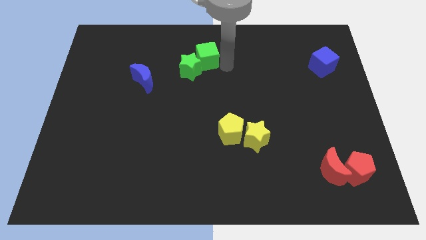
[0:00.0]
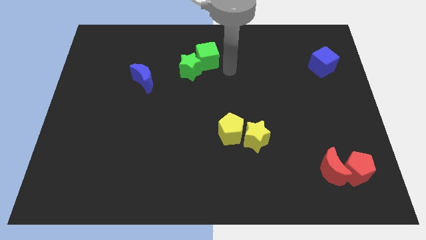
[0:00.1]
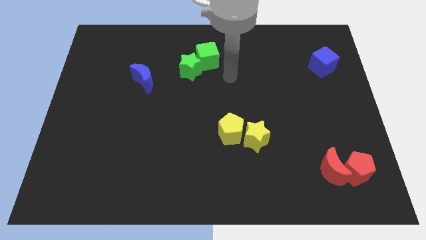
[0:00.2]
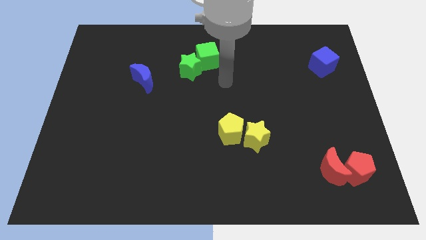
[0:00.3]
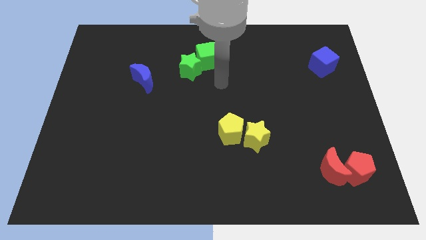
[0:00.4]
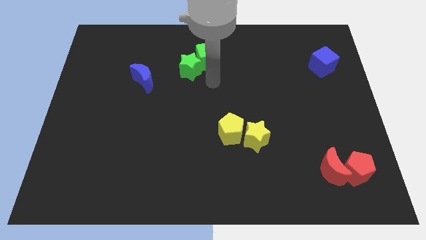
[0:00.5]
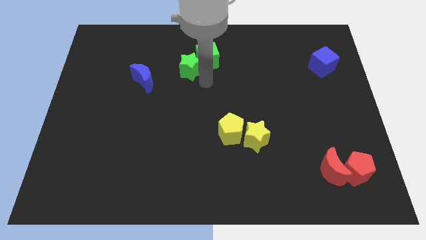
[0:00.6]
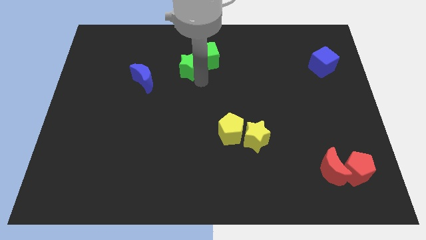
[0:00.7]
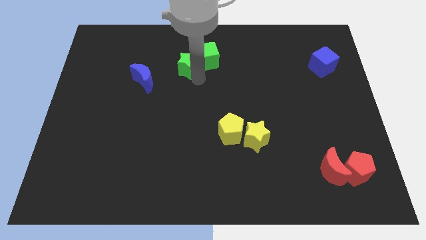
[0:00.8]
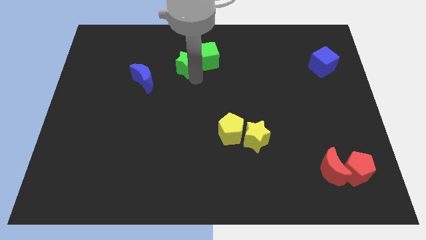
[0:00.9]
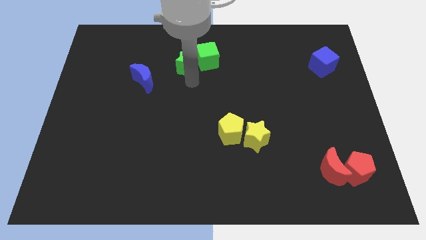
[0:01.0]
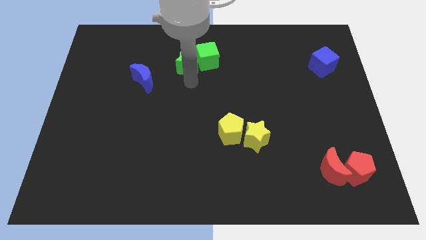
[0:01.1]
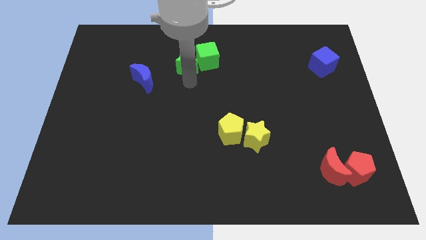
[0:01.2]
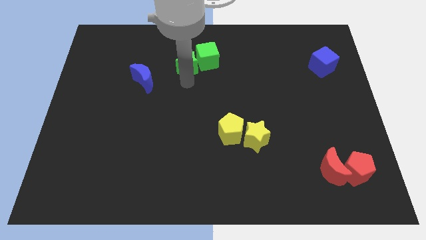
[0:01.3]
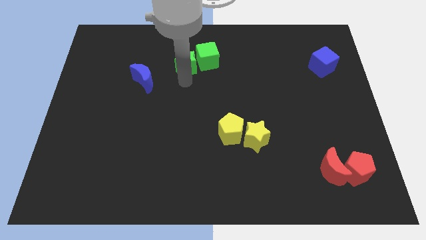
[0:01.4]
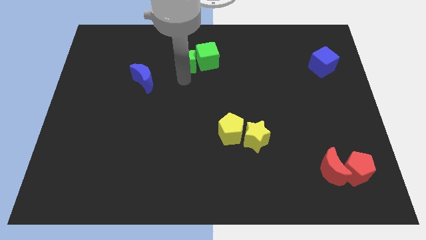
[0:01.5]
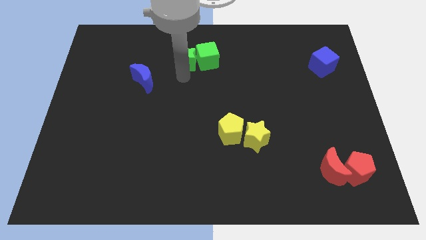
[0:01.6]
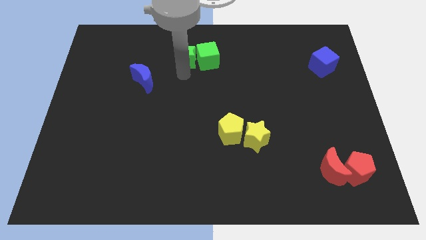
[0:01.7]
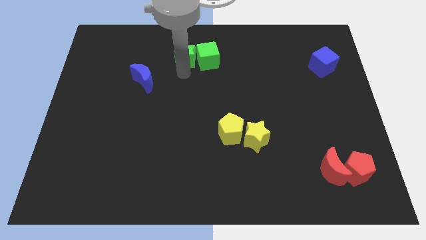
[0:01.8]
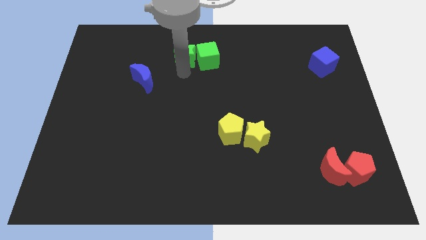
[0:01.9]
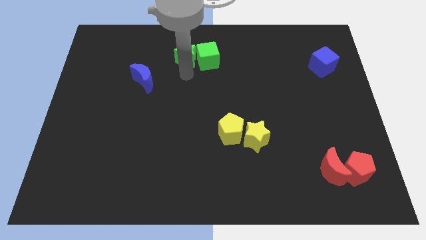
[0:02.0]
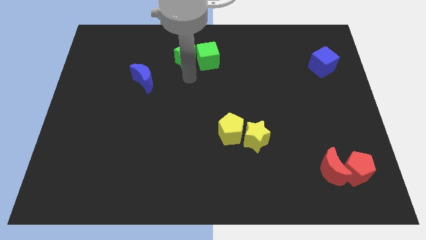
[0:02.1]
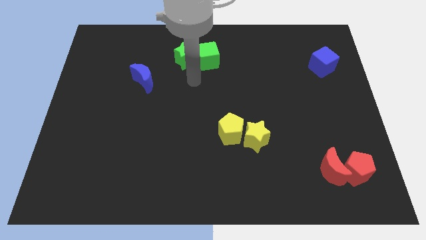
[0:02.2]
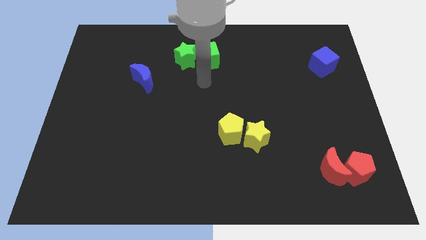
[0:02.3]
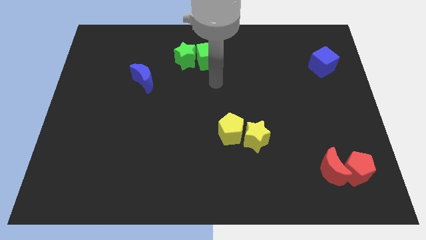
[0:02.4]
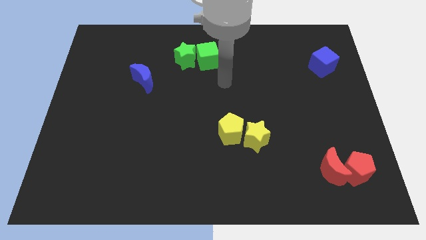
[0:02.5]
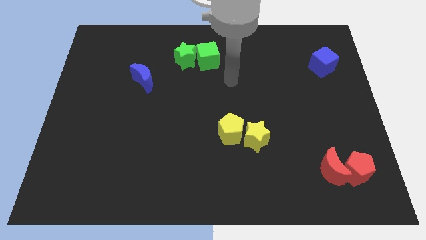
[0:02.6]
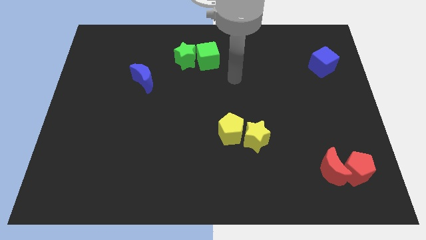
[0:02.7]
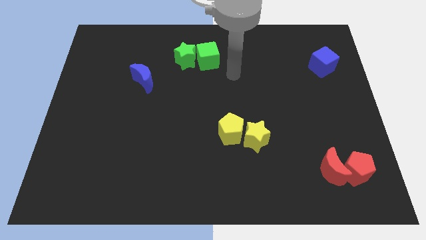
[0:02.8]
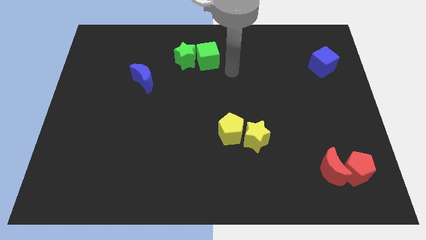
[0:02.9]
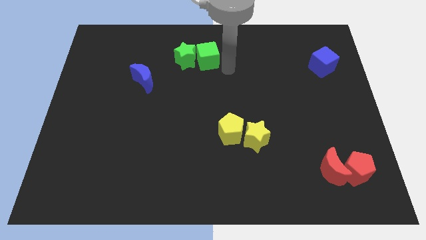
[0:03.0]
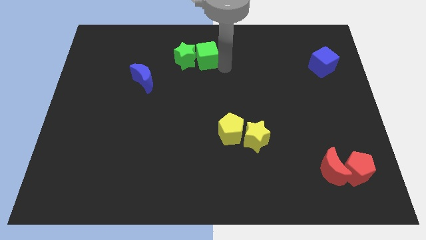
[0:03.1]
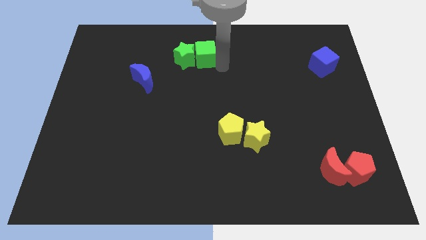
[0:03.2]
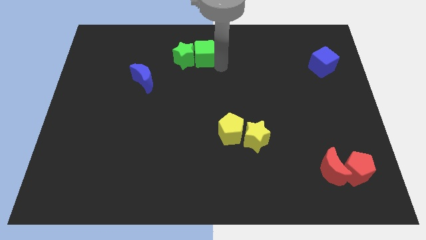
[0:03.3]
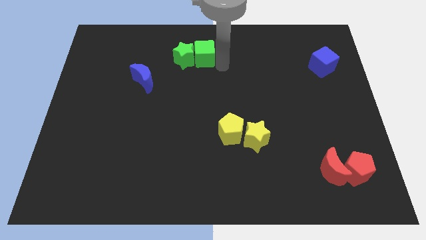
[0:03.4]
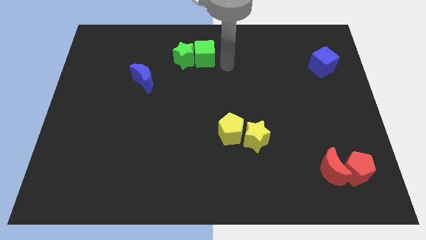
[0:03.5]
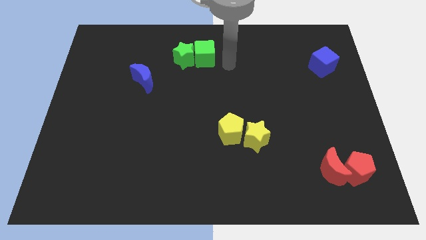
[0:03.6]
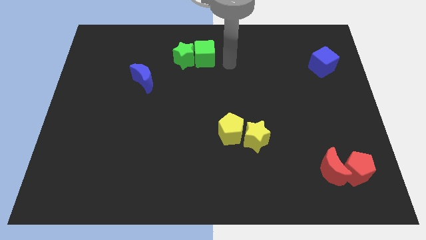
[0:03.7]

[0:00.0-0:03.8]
adjust the green cube and green star horizontal to each other

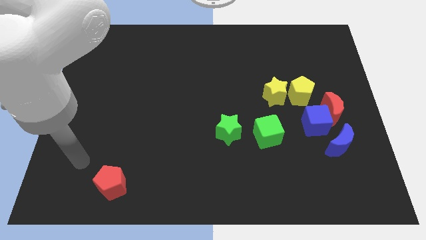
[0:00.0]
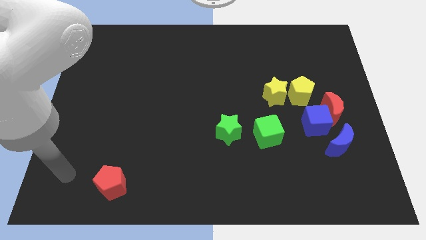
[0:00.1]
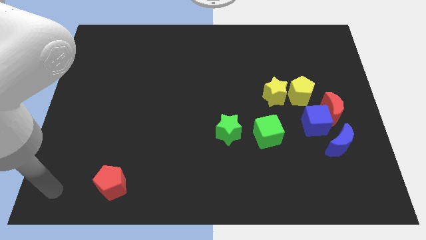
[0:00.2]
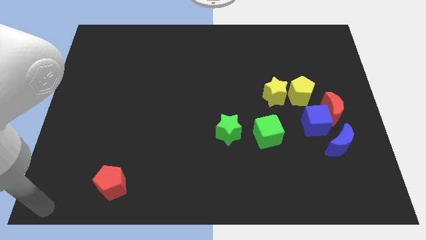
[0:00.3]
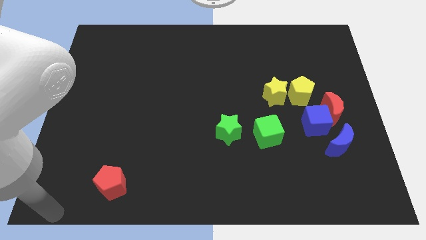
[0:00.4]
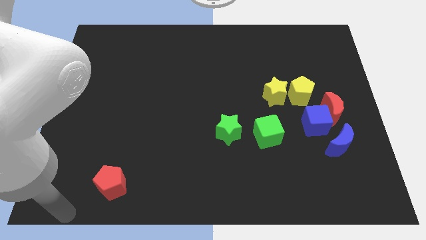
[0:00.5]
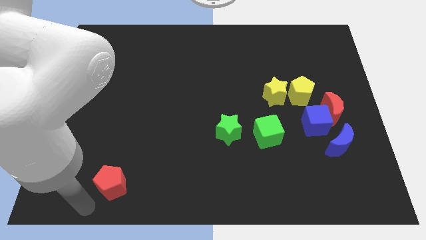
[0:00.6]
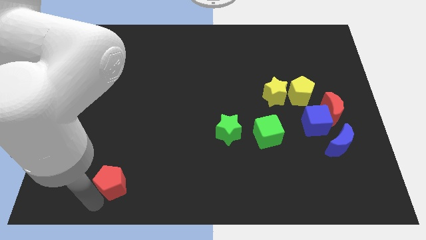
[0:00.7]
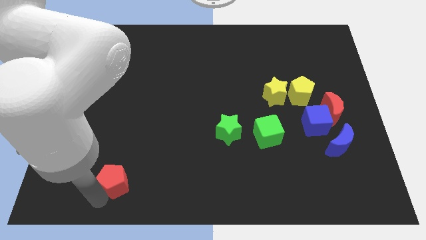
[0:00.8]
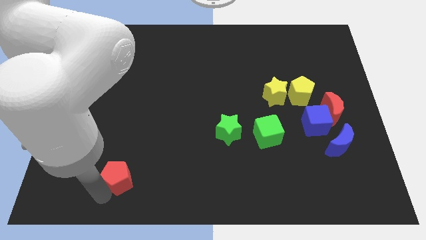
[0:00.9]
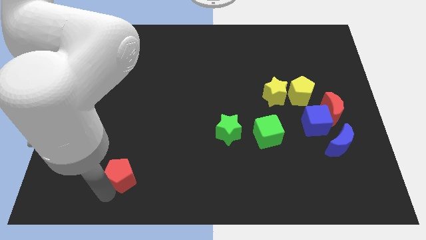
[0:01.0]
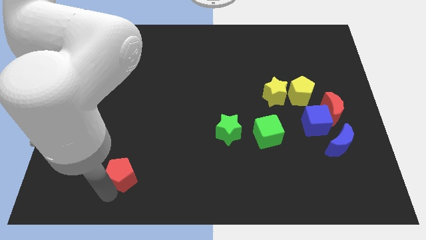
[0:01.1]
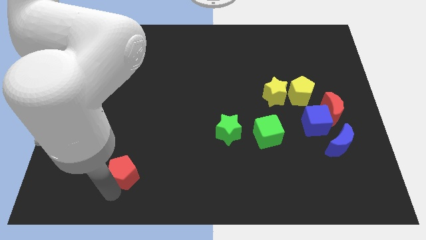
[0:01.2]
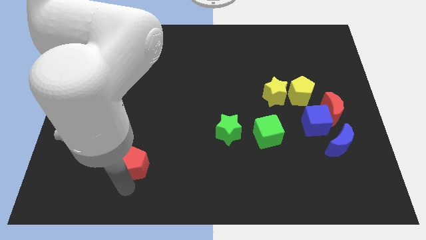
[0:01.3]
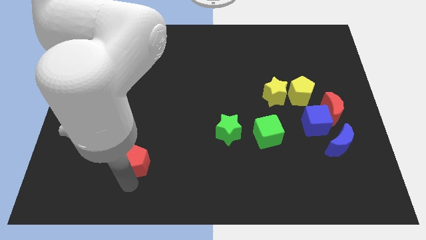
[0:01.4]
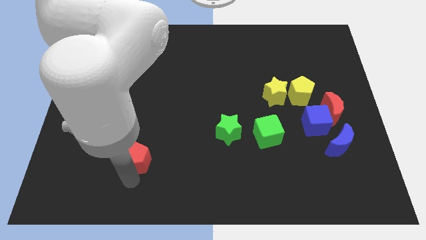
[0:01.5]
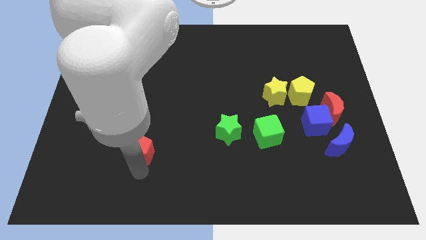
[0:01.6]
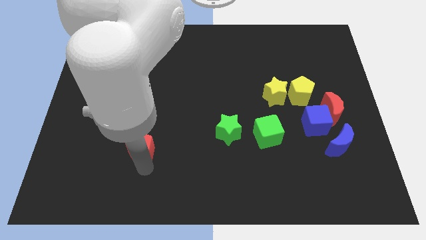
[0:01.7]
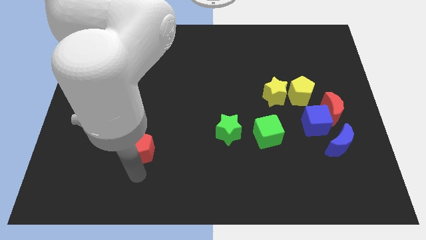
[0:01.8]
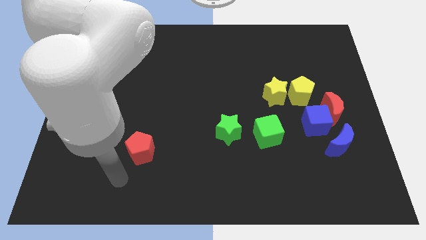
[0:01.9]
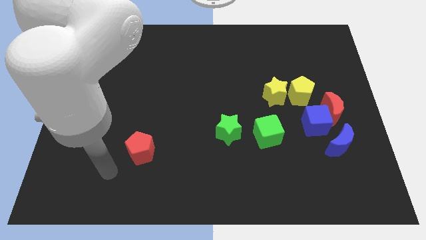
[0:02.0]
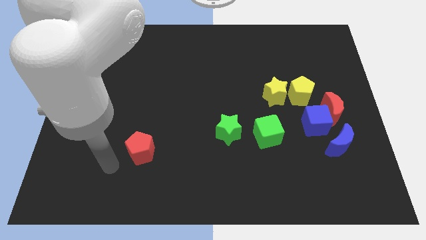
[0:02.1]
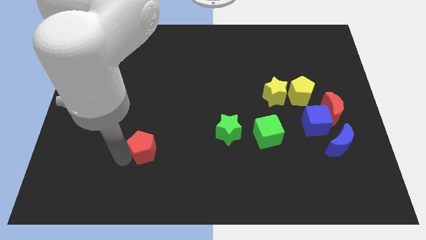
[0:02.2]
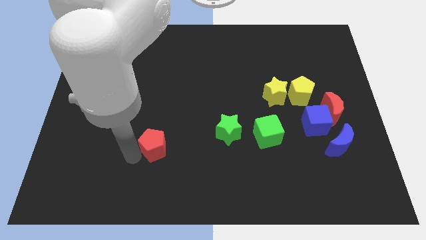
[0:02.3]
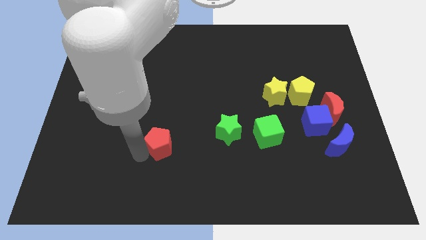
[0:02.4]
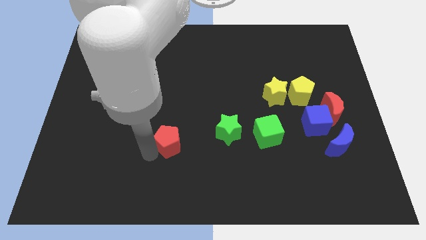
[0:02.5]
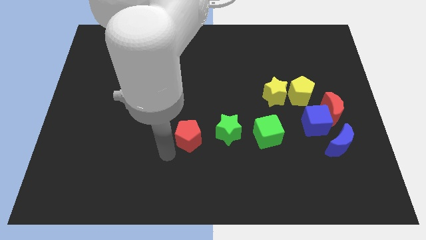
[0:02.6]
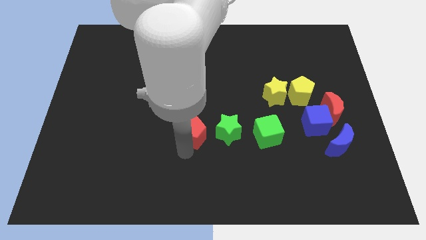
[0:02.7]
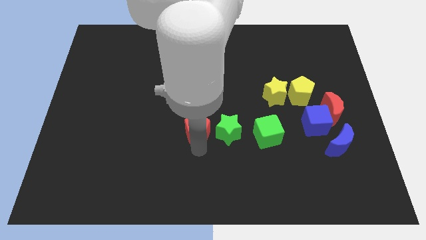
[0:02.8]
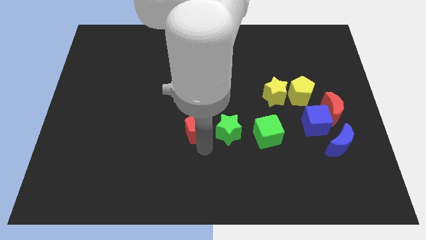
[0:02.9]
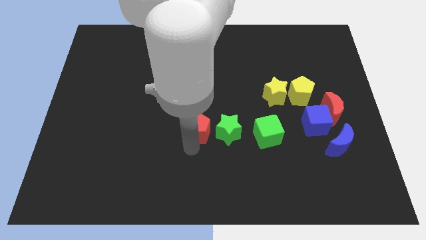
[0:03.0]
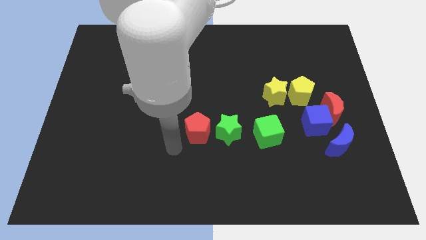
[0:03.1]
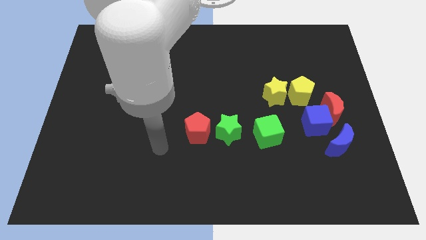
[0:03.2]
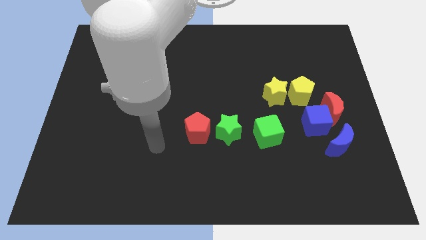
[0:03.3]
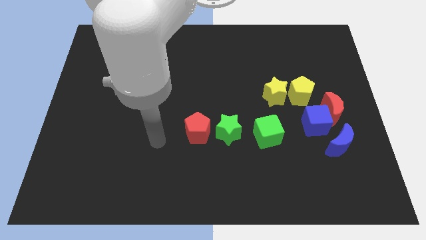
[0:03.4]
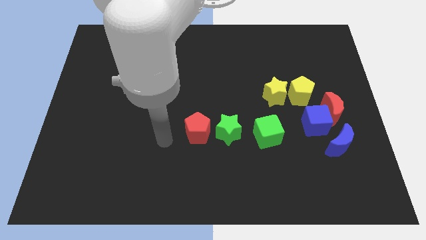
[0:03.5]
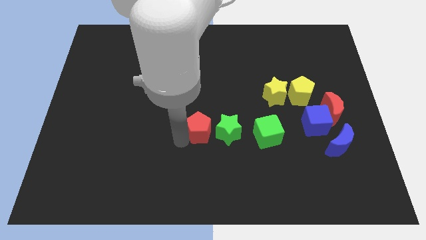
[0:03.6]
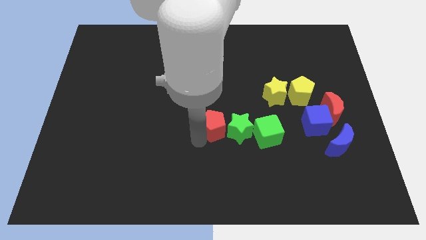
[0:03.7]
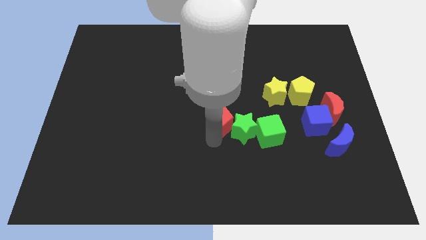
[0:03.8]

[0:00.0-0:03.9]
slide the red pentagon into the green star

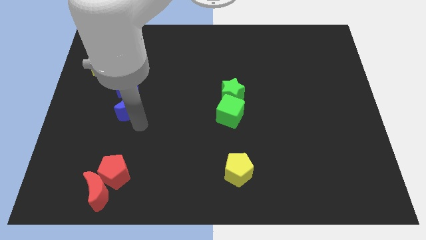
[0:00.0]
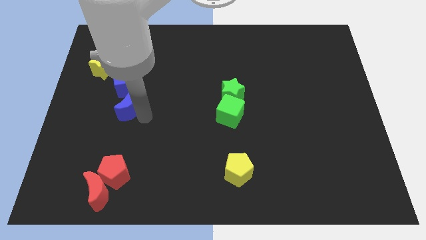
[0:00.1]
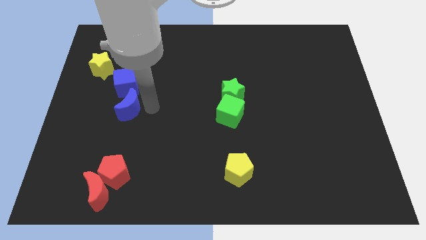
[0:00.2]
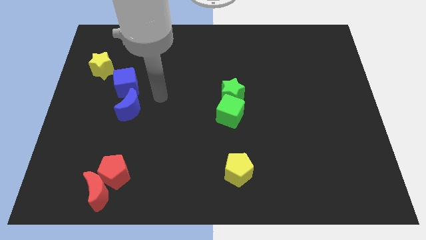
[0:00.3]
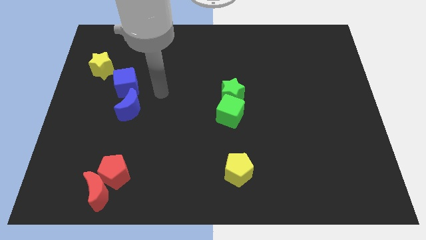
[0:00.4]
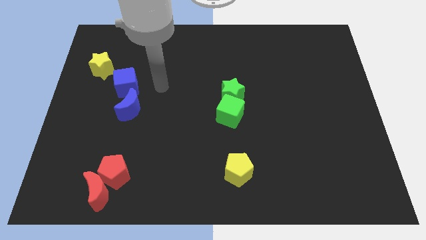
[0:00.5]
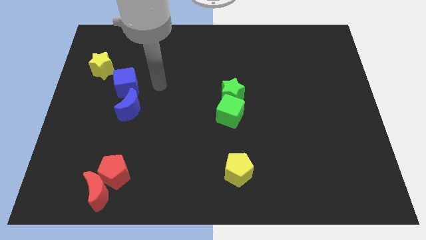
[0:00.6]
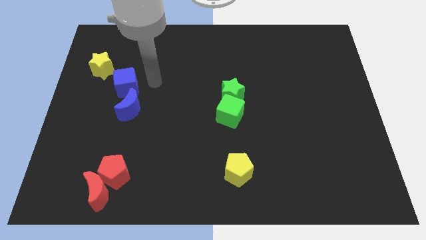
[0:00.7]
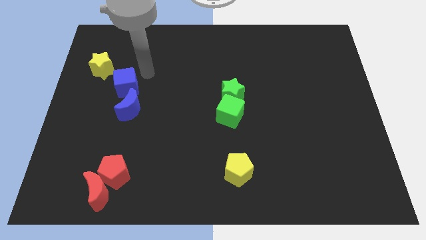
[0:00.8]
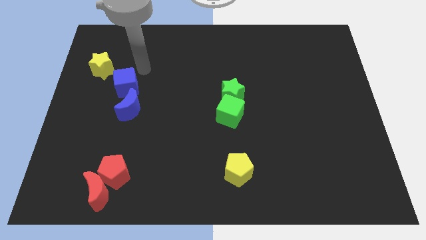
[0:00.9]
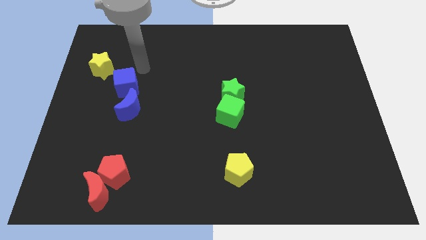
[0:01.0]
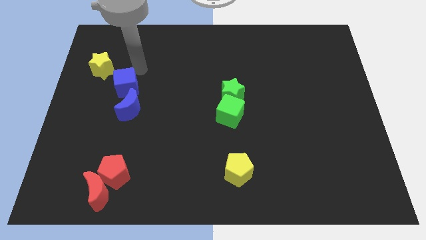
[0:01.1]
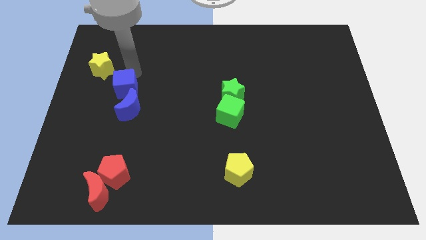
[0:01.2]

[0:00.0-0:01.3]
move the arm towards the top of blue cube

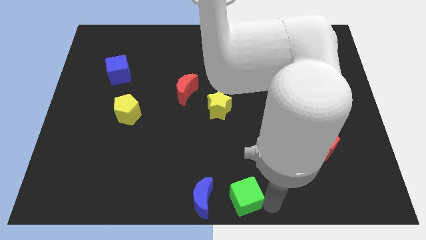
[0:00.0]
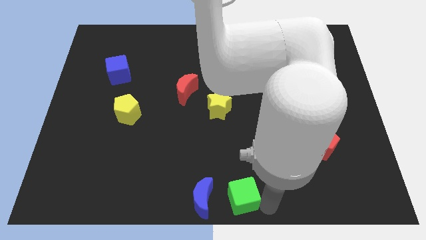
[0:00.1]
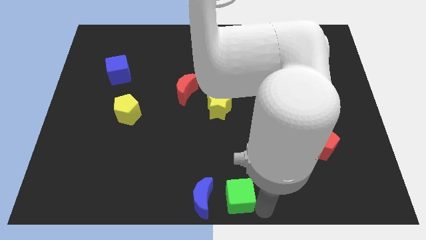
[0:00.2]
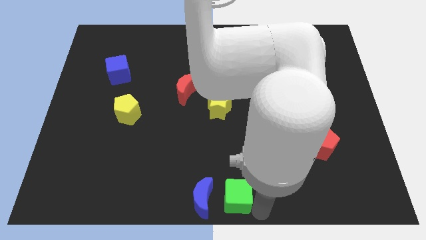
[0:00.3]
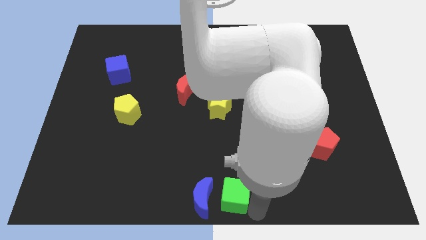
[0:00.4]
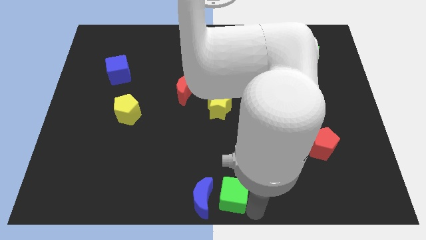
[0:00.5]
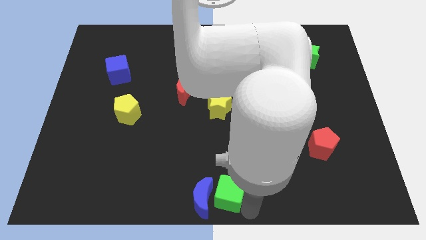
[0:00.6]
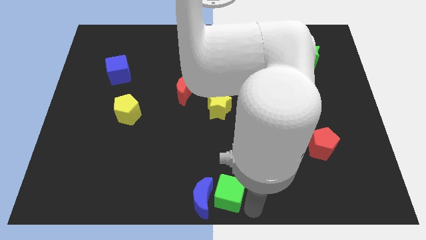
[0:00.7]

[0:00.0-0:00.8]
move the green cube on the right side of the blue crescent
